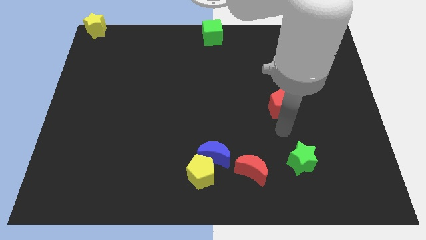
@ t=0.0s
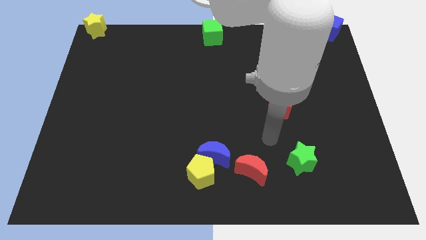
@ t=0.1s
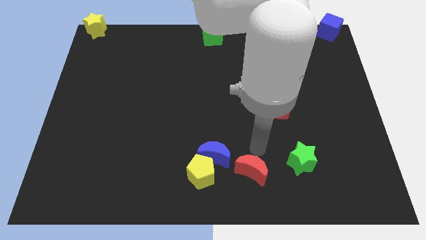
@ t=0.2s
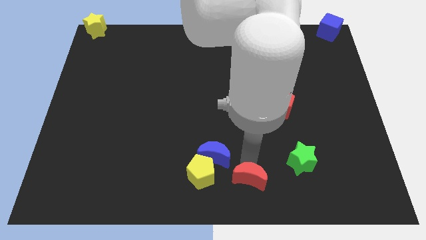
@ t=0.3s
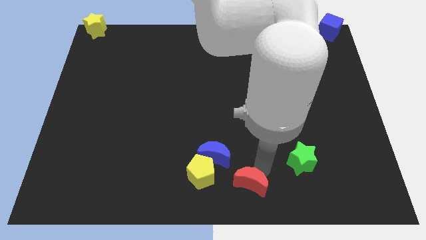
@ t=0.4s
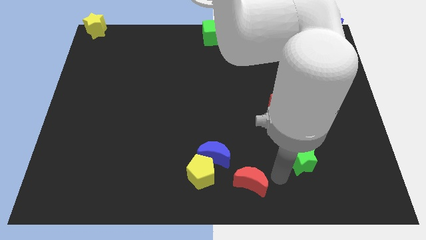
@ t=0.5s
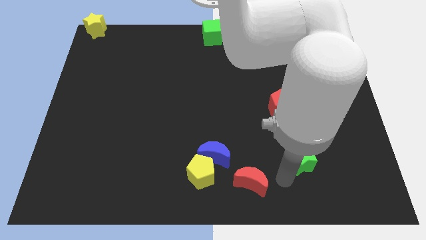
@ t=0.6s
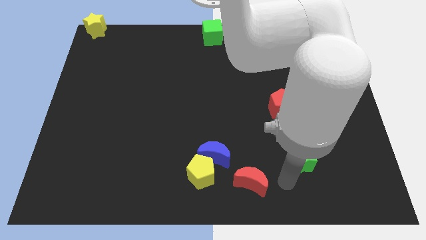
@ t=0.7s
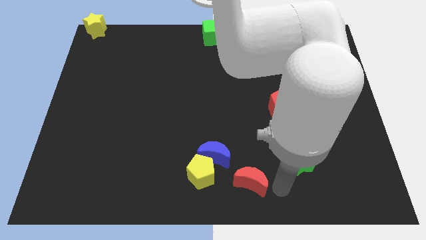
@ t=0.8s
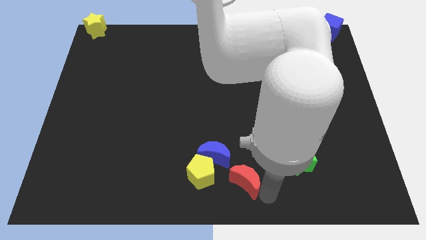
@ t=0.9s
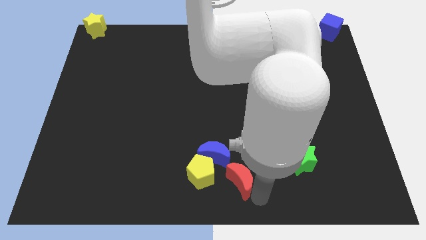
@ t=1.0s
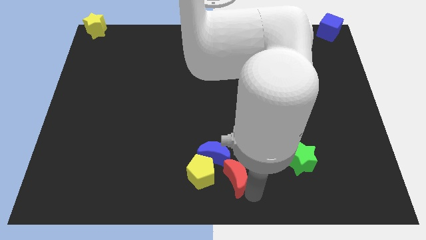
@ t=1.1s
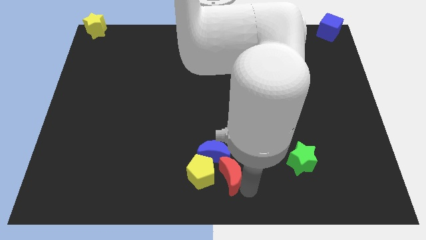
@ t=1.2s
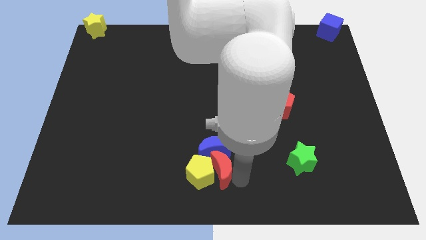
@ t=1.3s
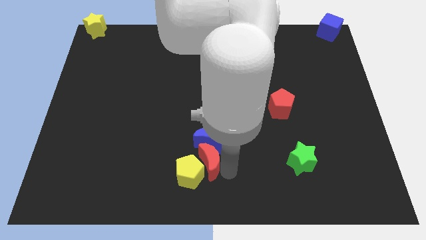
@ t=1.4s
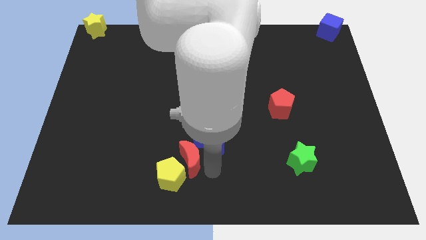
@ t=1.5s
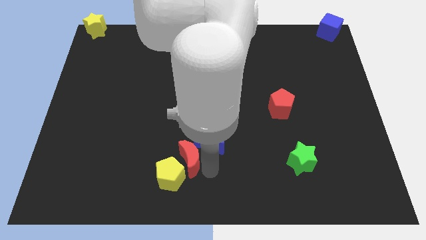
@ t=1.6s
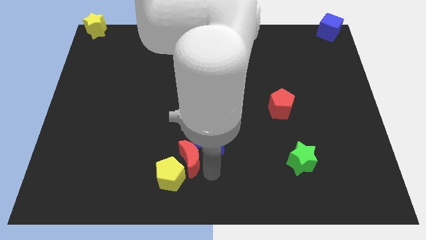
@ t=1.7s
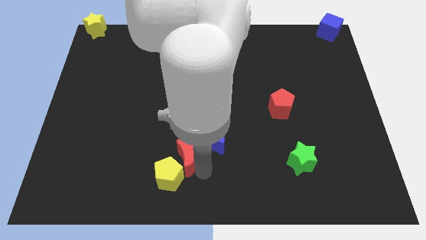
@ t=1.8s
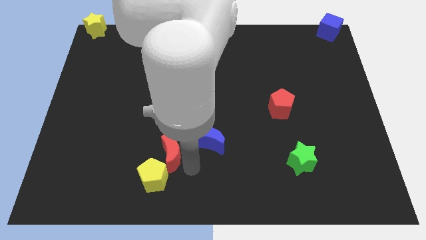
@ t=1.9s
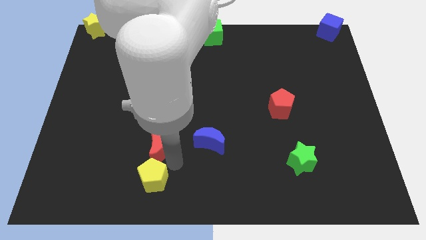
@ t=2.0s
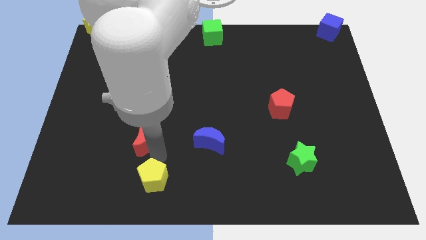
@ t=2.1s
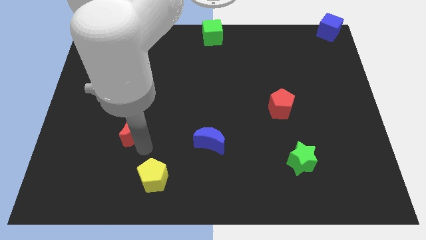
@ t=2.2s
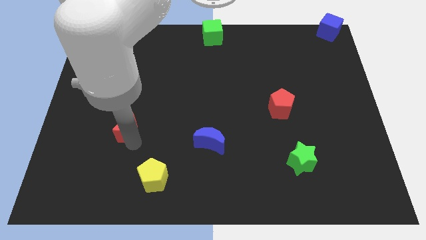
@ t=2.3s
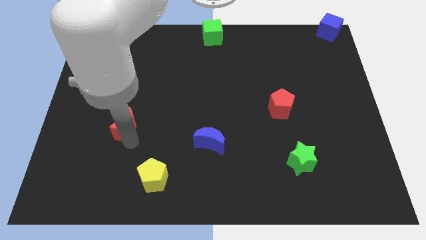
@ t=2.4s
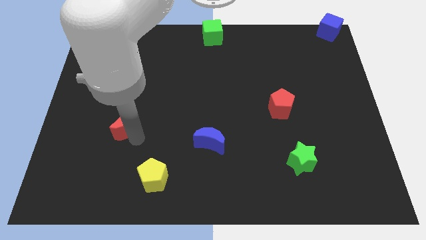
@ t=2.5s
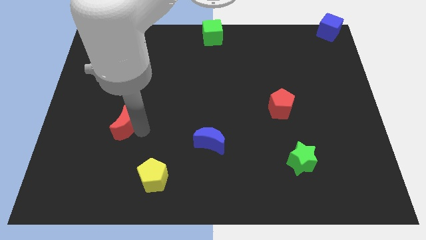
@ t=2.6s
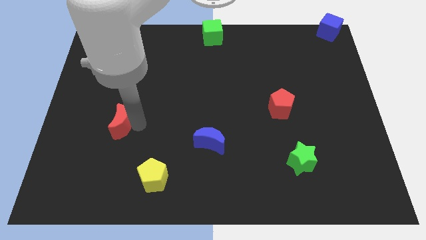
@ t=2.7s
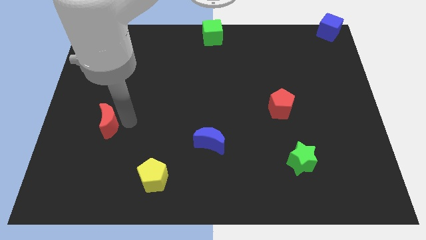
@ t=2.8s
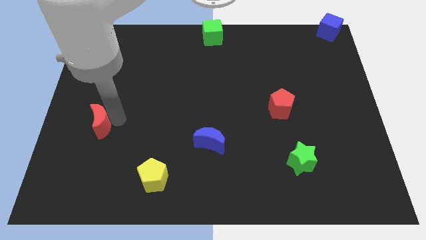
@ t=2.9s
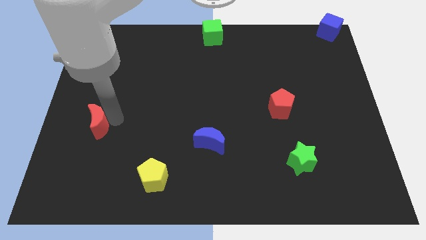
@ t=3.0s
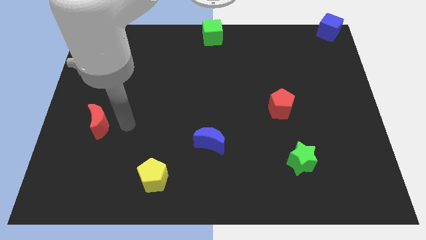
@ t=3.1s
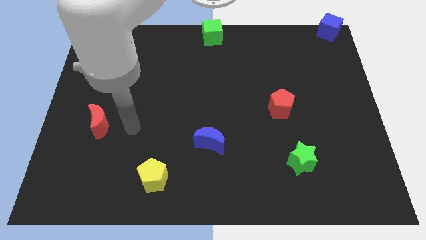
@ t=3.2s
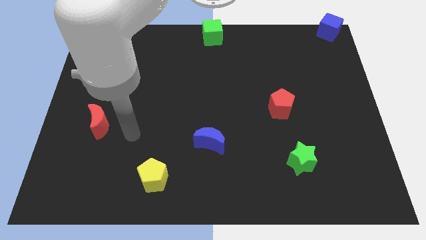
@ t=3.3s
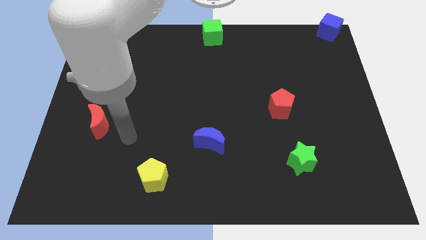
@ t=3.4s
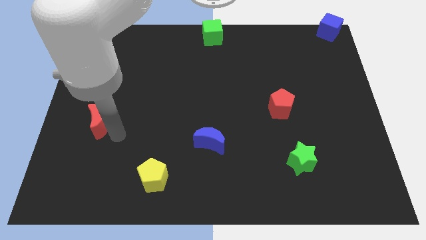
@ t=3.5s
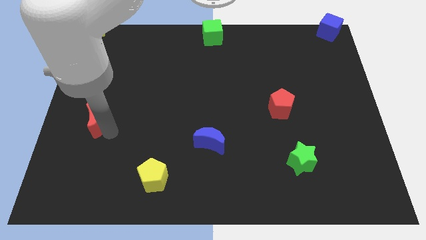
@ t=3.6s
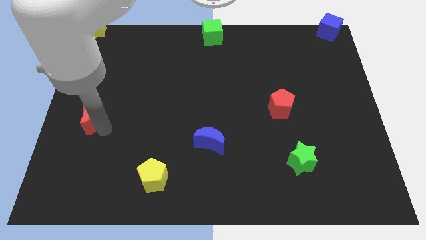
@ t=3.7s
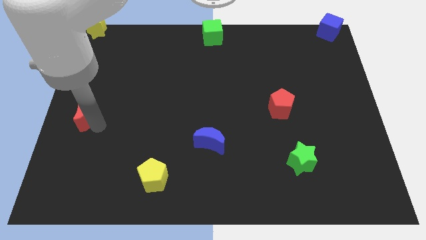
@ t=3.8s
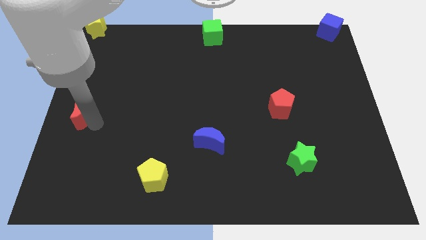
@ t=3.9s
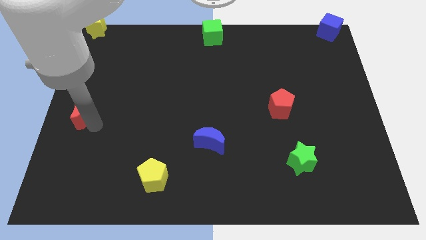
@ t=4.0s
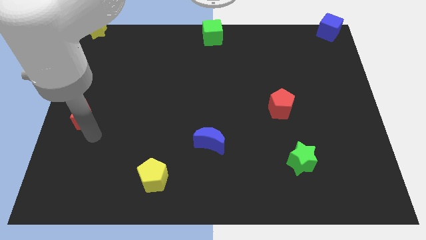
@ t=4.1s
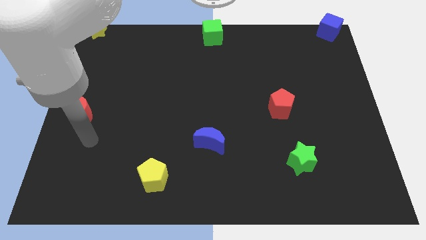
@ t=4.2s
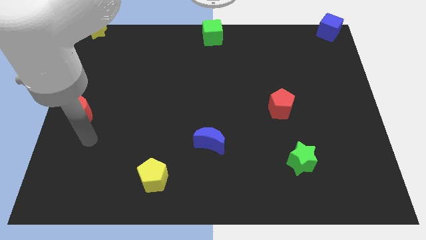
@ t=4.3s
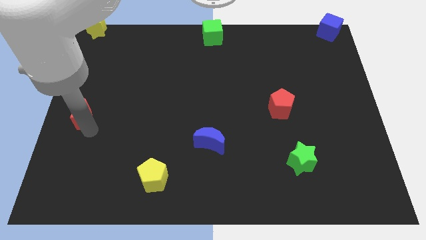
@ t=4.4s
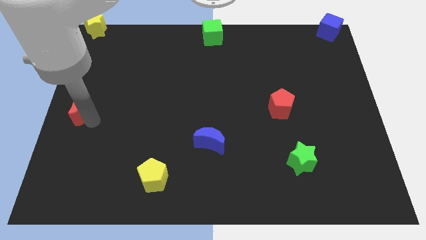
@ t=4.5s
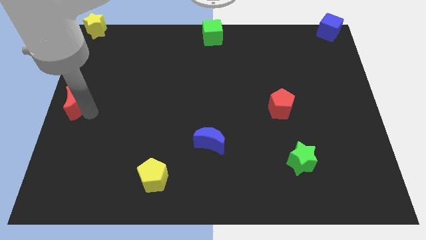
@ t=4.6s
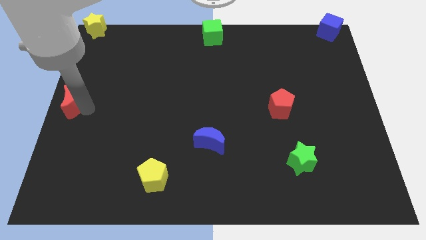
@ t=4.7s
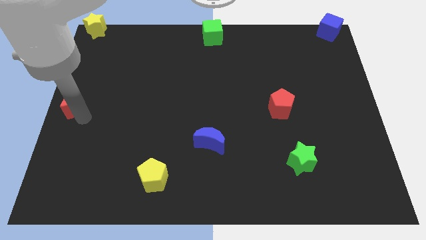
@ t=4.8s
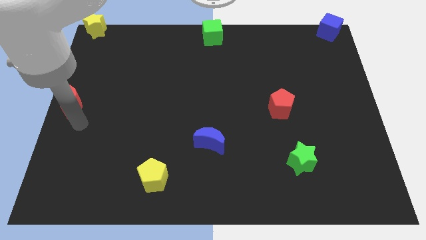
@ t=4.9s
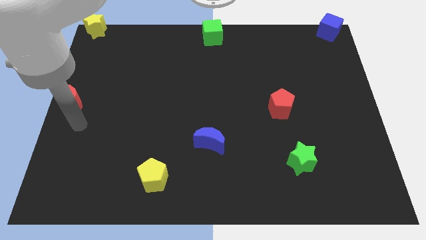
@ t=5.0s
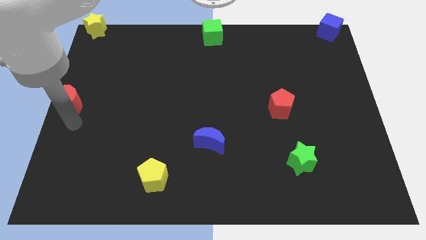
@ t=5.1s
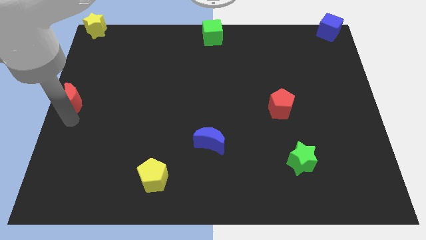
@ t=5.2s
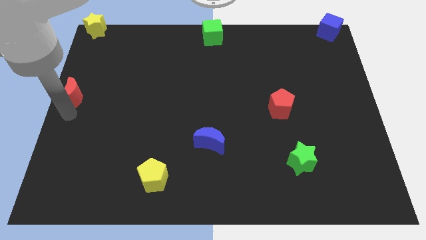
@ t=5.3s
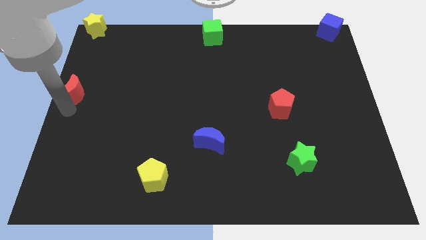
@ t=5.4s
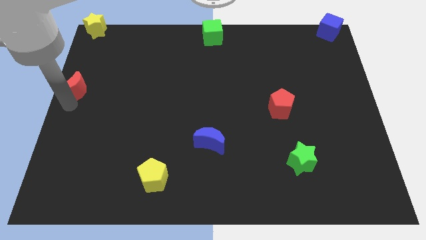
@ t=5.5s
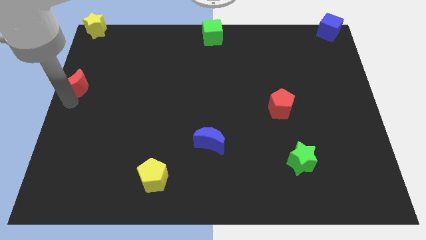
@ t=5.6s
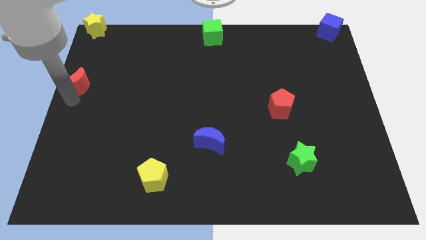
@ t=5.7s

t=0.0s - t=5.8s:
place the red crescent at the center left side of the board

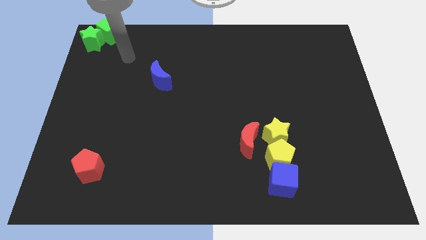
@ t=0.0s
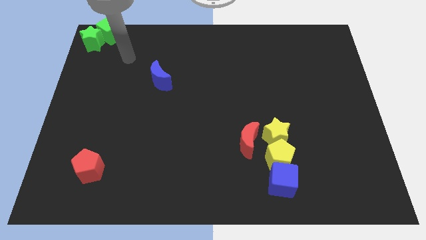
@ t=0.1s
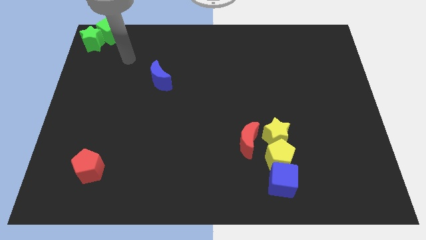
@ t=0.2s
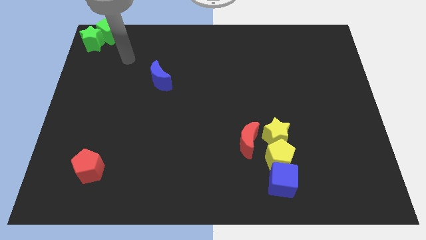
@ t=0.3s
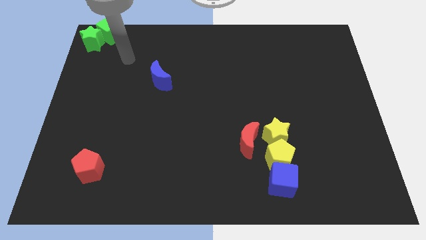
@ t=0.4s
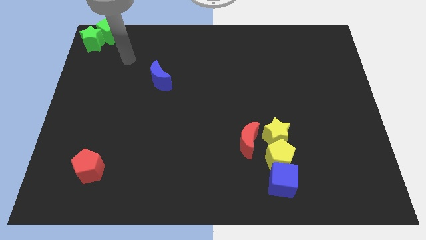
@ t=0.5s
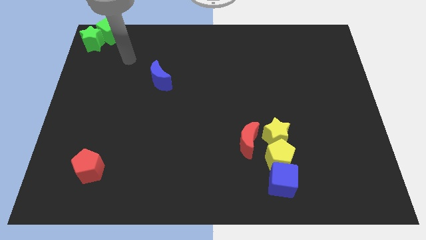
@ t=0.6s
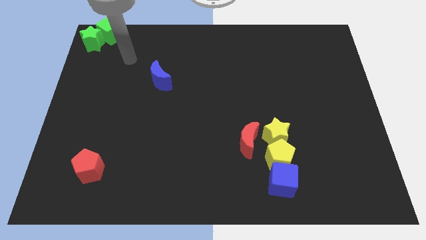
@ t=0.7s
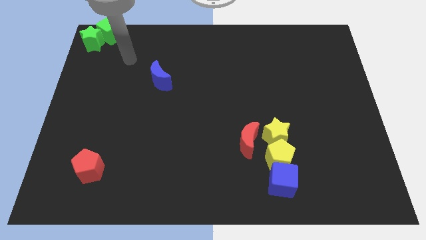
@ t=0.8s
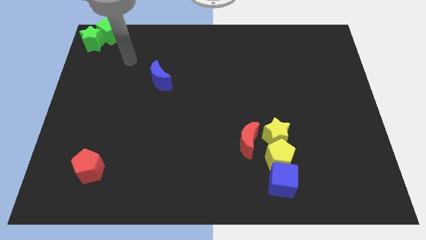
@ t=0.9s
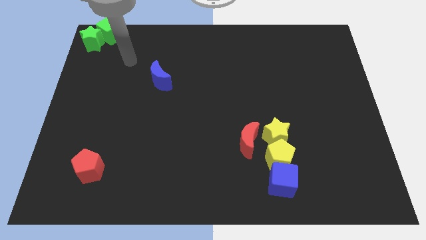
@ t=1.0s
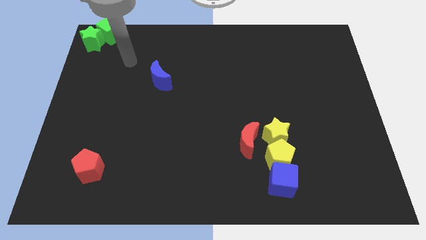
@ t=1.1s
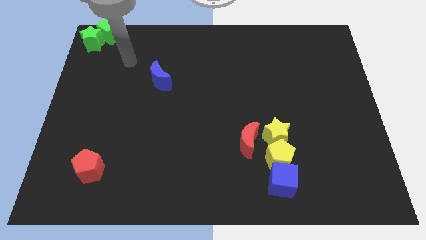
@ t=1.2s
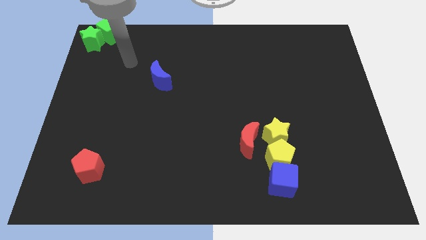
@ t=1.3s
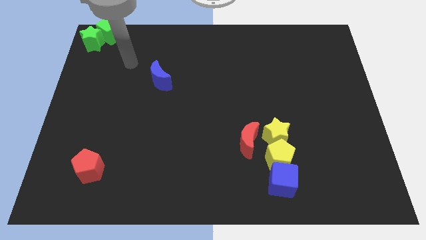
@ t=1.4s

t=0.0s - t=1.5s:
move robot arm slightly towards the blue crescent

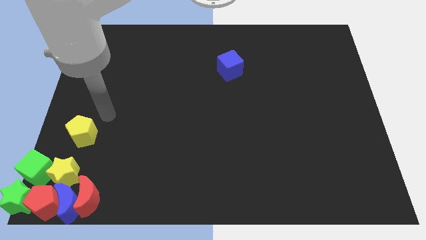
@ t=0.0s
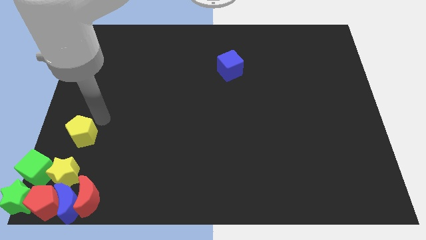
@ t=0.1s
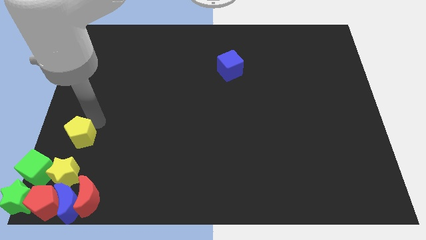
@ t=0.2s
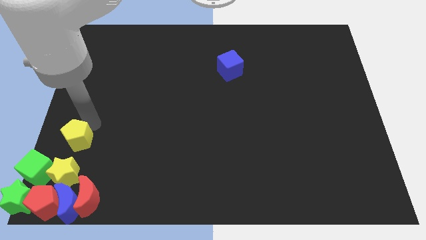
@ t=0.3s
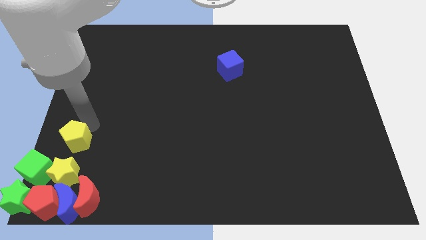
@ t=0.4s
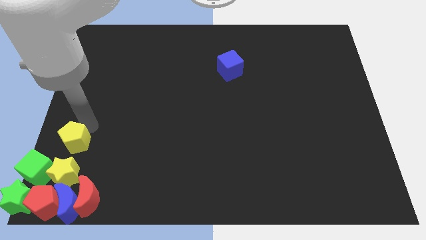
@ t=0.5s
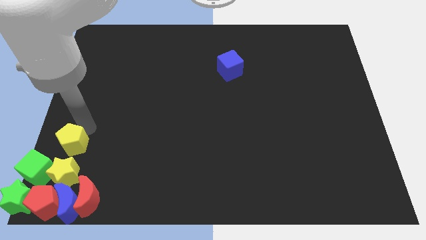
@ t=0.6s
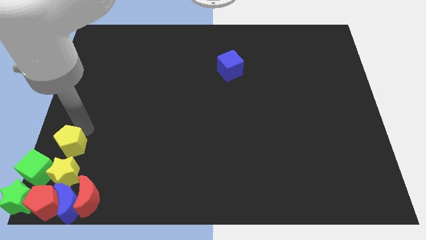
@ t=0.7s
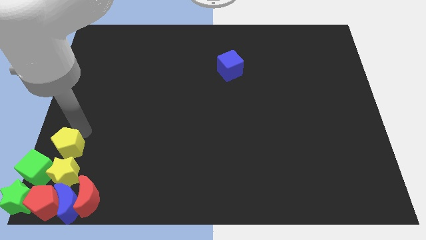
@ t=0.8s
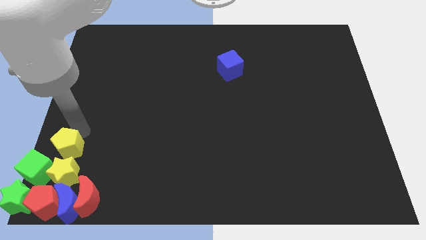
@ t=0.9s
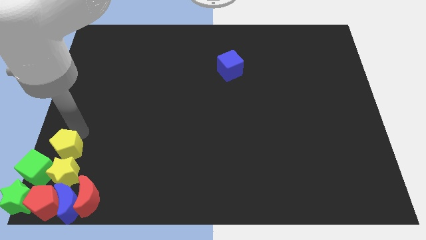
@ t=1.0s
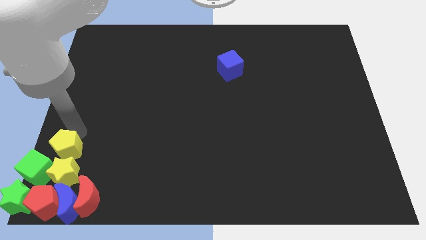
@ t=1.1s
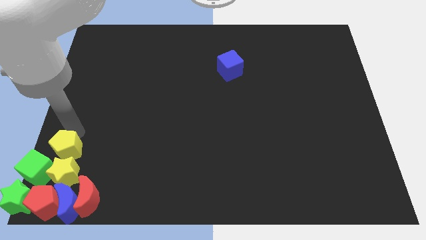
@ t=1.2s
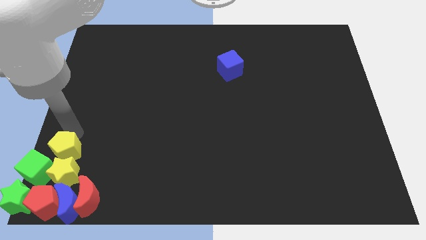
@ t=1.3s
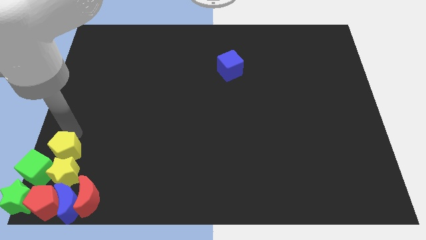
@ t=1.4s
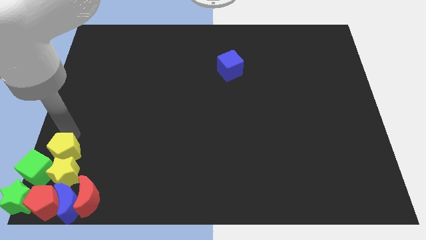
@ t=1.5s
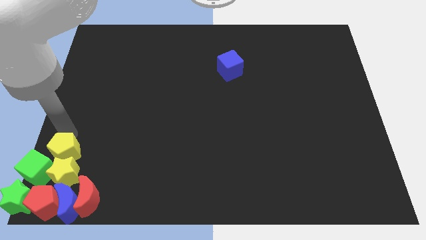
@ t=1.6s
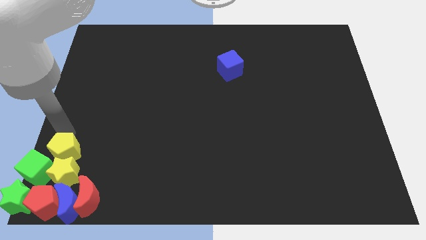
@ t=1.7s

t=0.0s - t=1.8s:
move the yellow pentagon to the top of the yellow star
